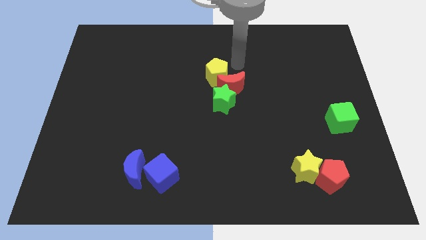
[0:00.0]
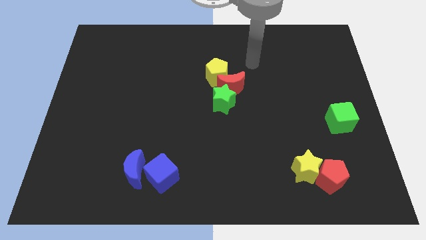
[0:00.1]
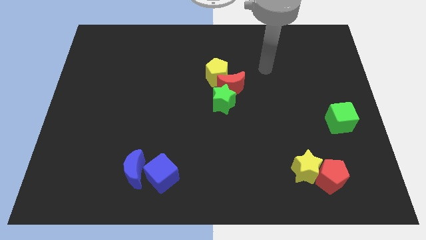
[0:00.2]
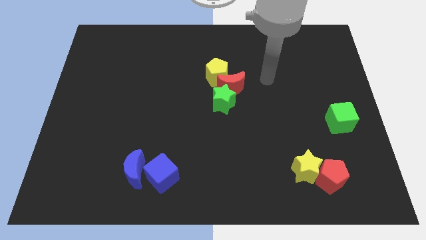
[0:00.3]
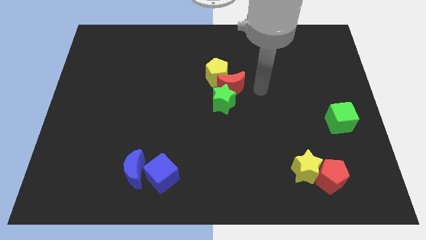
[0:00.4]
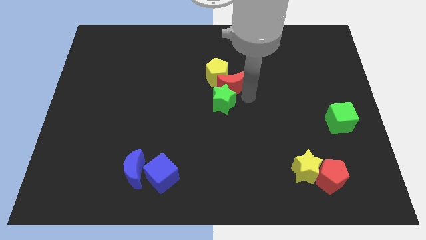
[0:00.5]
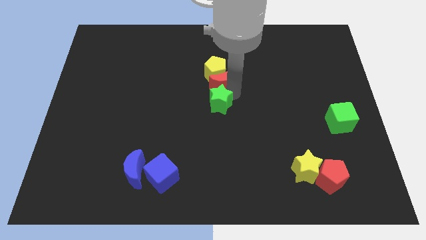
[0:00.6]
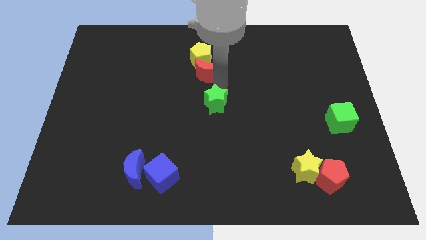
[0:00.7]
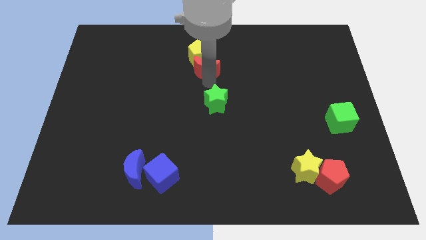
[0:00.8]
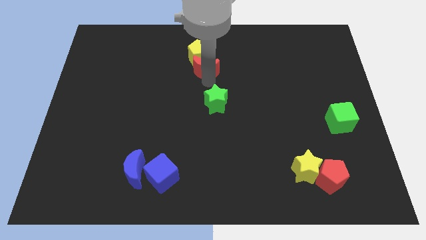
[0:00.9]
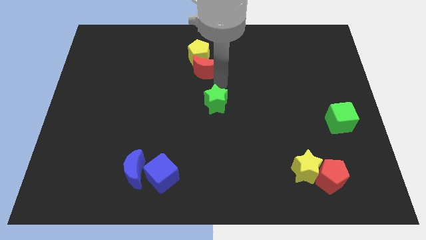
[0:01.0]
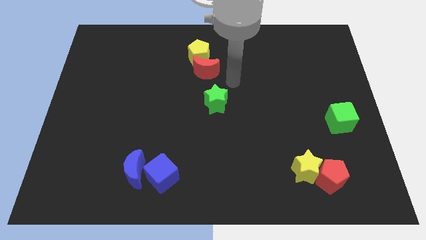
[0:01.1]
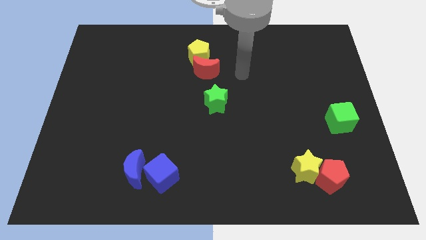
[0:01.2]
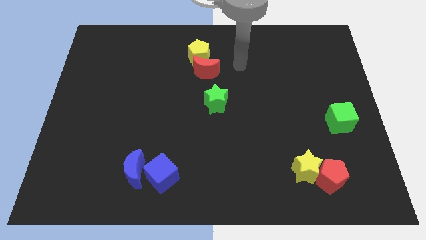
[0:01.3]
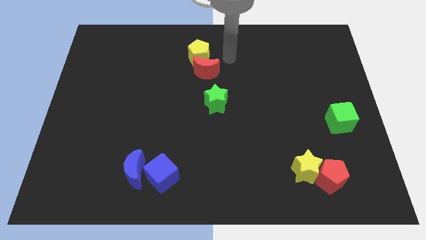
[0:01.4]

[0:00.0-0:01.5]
separate the red moon and green star

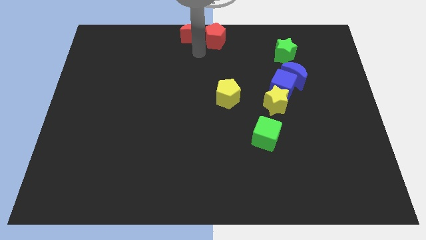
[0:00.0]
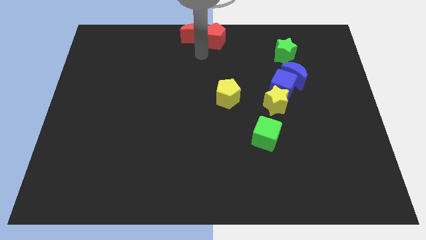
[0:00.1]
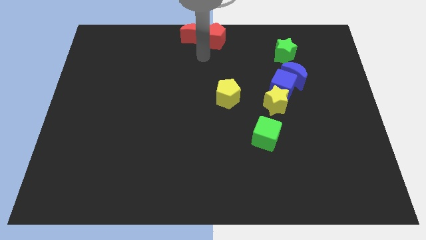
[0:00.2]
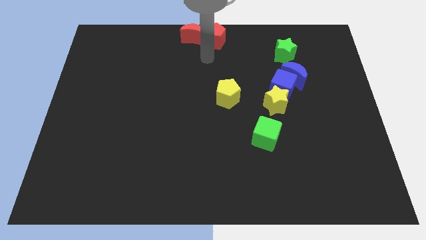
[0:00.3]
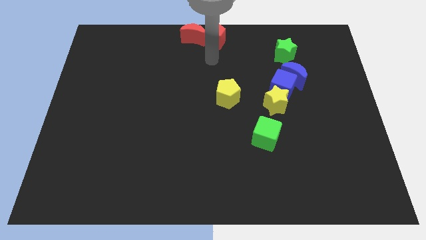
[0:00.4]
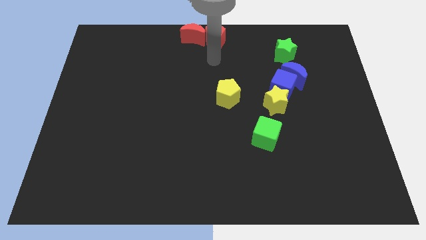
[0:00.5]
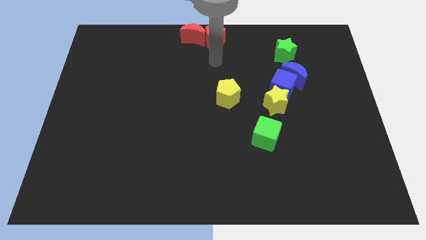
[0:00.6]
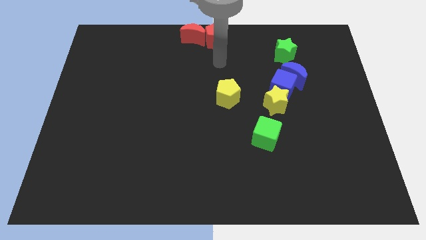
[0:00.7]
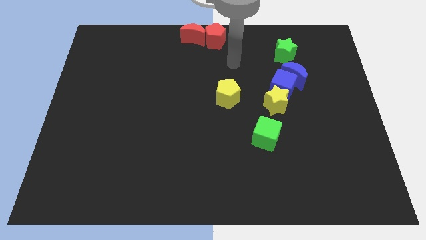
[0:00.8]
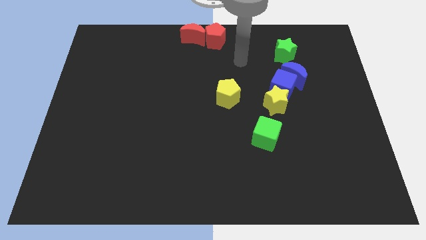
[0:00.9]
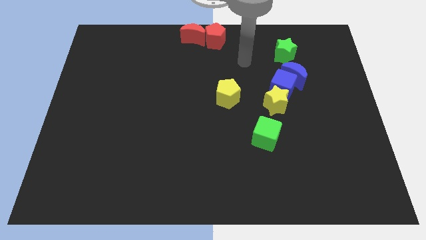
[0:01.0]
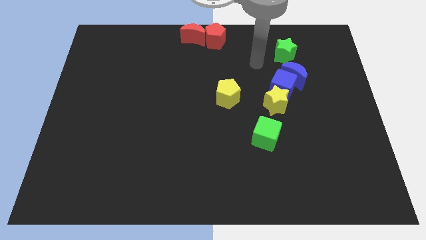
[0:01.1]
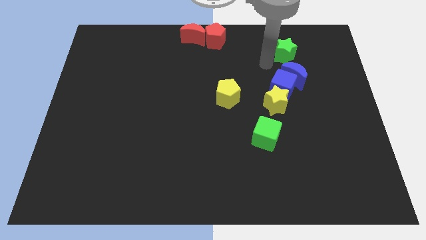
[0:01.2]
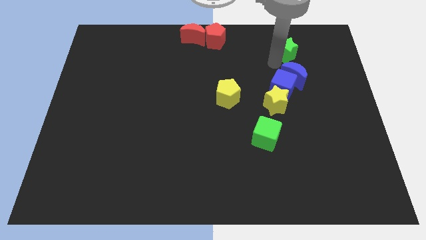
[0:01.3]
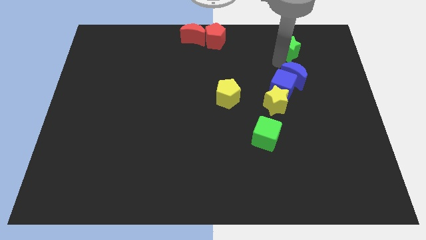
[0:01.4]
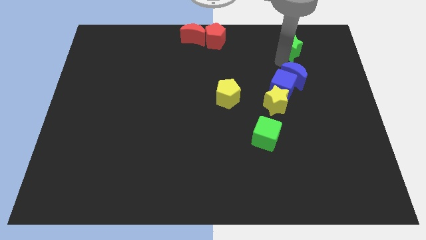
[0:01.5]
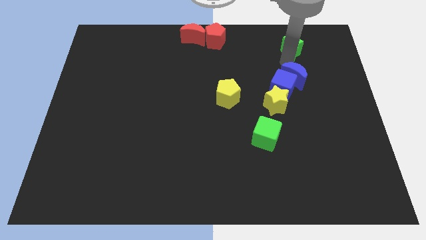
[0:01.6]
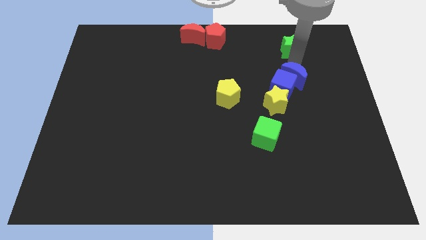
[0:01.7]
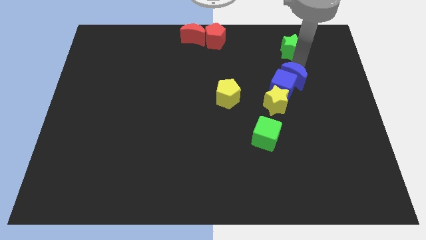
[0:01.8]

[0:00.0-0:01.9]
place your arm in between the green star and blue moon

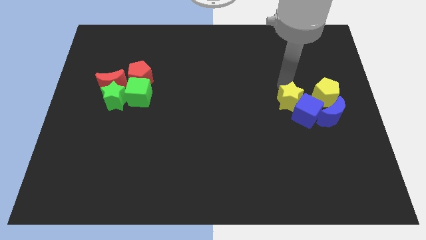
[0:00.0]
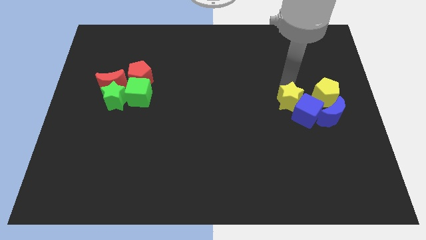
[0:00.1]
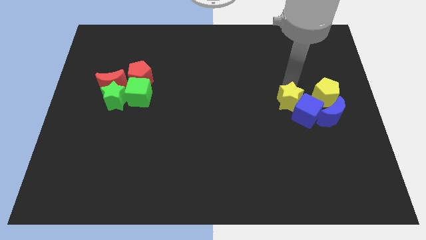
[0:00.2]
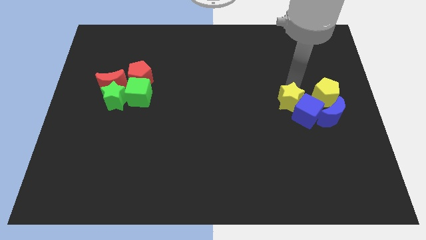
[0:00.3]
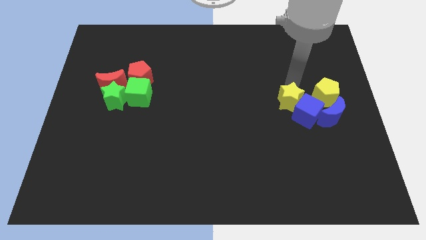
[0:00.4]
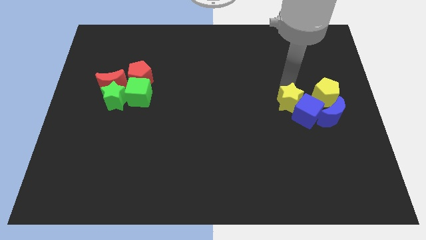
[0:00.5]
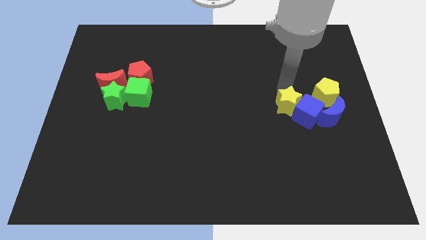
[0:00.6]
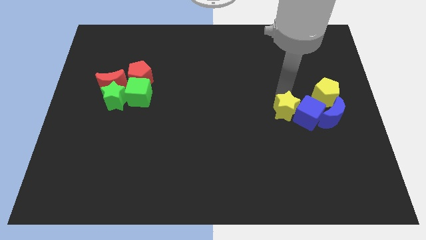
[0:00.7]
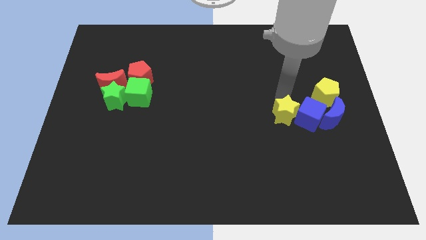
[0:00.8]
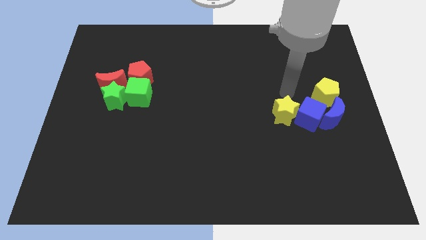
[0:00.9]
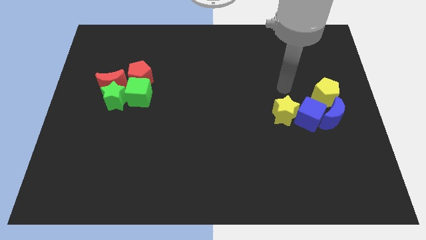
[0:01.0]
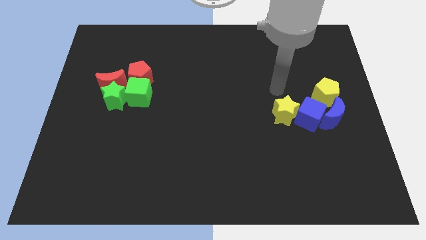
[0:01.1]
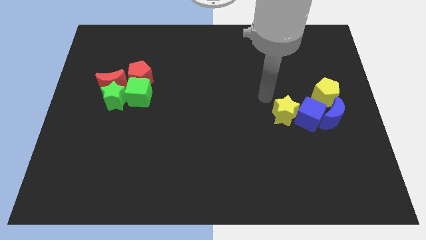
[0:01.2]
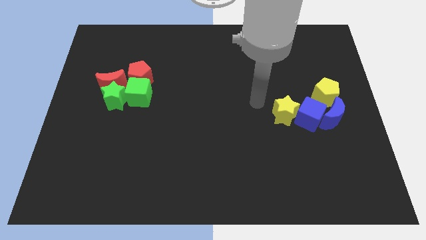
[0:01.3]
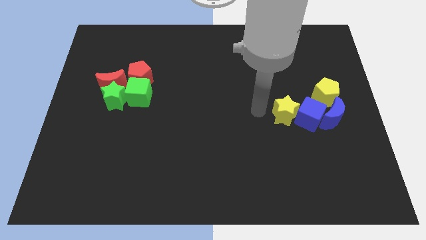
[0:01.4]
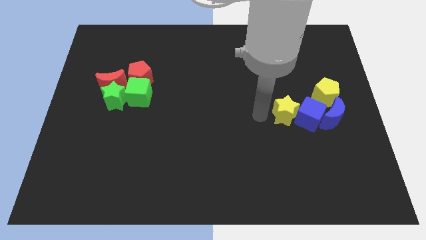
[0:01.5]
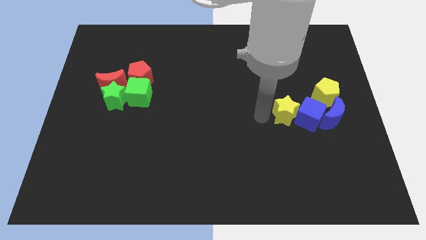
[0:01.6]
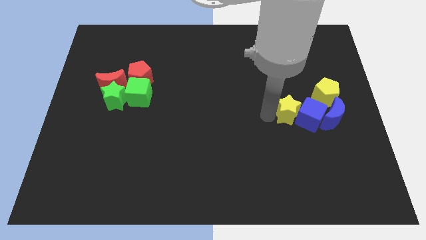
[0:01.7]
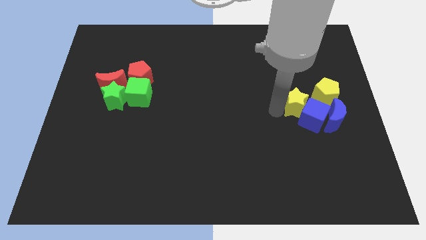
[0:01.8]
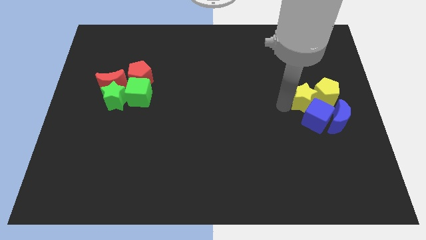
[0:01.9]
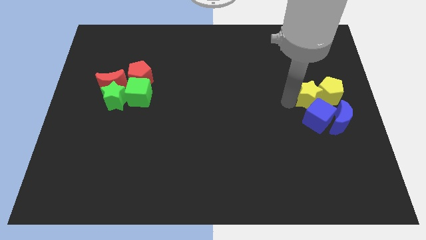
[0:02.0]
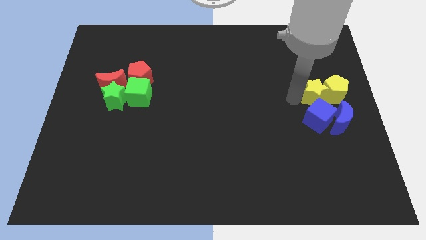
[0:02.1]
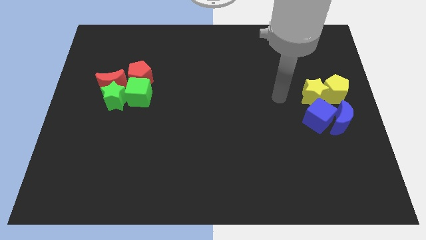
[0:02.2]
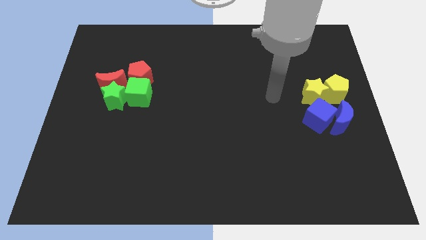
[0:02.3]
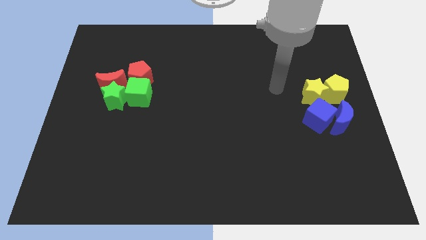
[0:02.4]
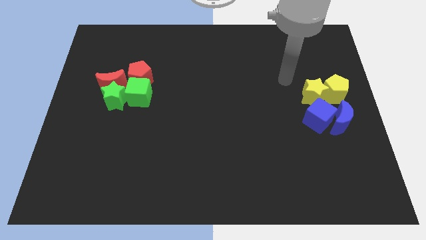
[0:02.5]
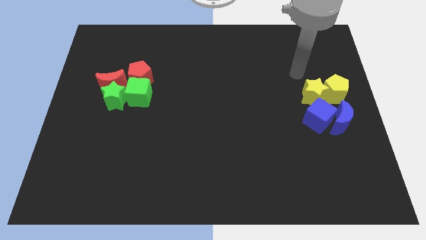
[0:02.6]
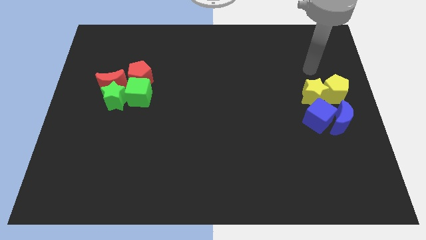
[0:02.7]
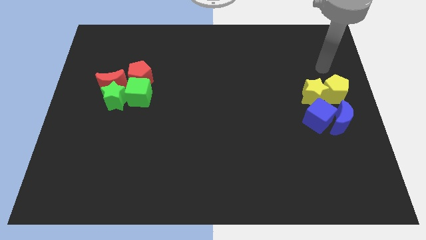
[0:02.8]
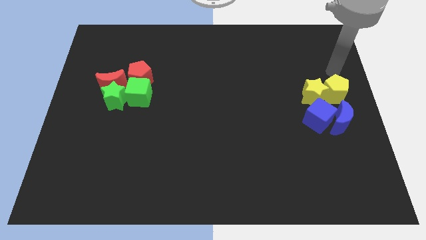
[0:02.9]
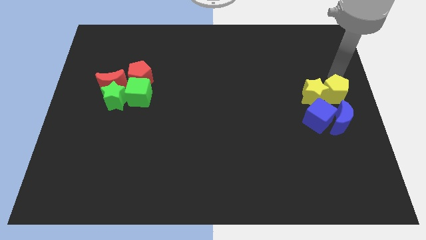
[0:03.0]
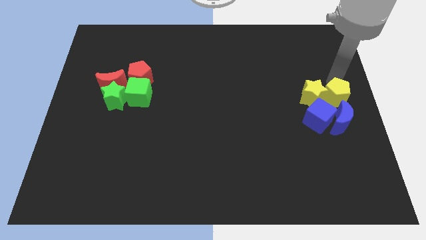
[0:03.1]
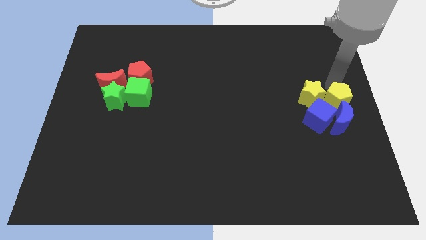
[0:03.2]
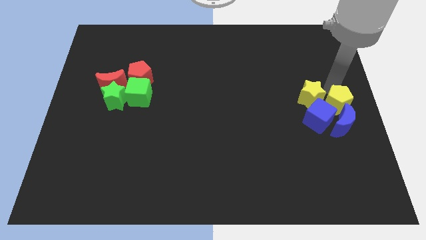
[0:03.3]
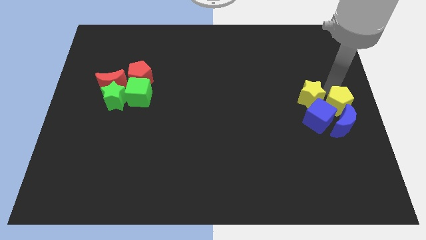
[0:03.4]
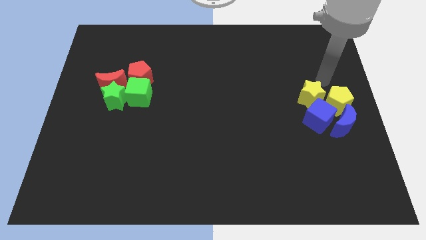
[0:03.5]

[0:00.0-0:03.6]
place your arm above the yellow blocks

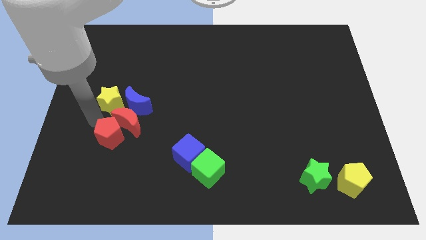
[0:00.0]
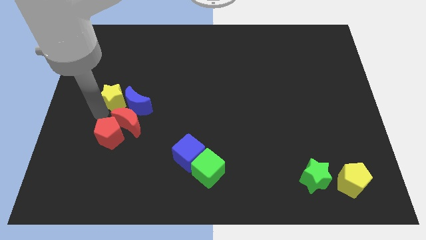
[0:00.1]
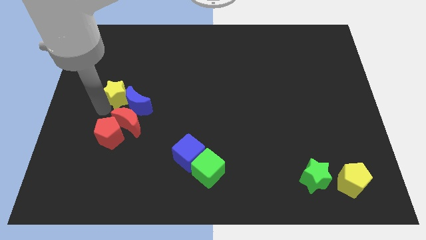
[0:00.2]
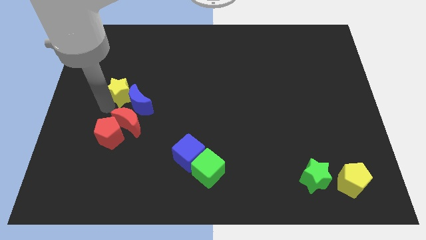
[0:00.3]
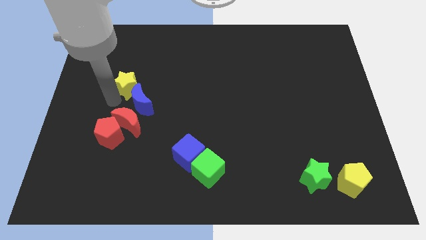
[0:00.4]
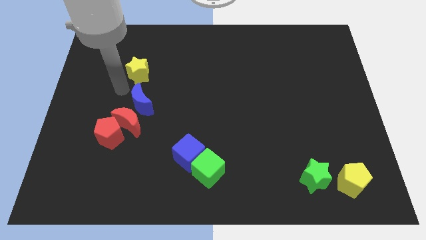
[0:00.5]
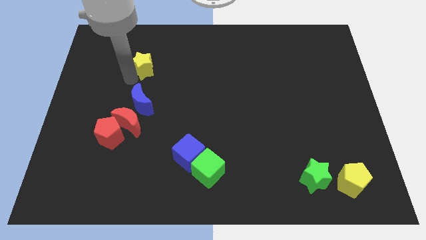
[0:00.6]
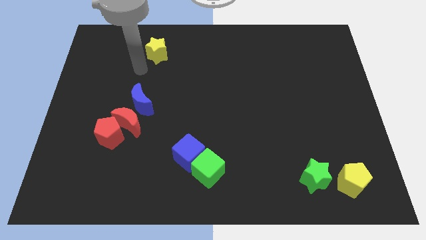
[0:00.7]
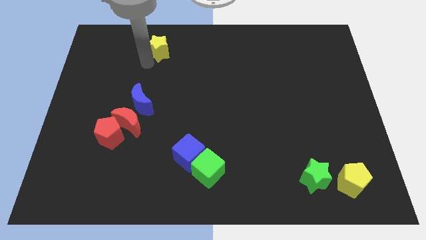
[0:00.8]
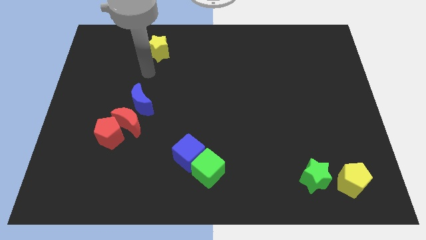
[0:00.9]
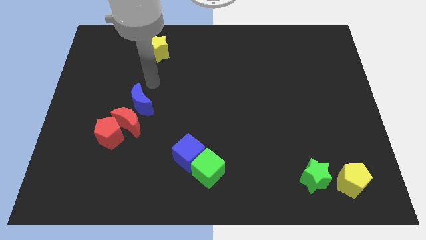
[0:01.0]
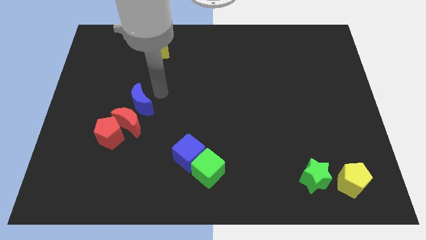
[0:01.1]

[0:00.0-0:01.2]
separate yellow star from red crescent

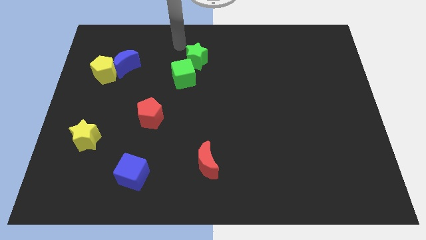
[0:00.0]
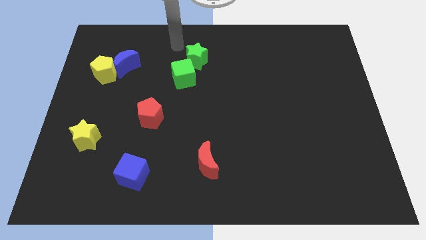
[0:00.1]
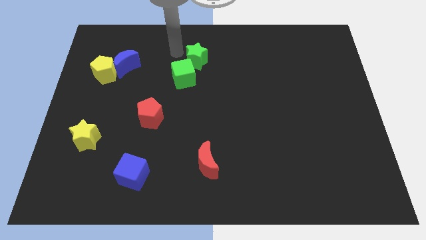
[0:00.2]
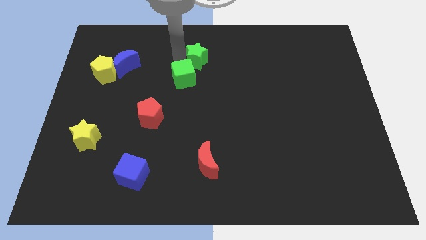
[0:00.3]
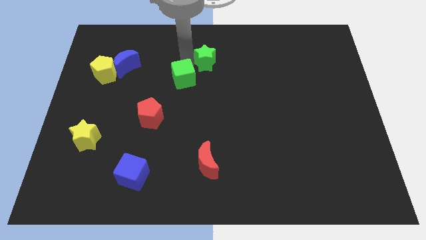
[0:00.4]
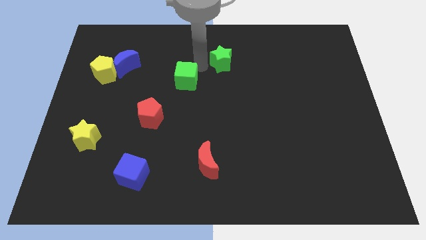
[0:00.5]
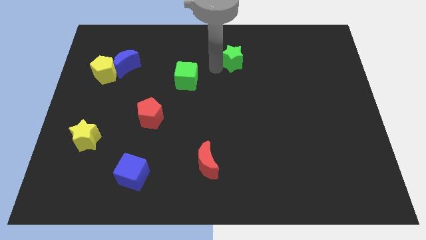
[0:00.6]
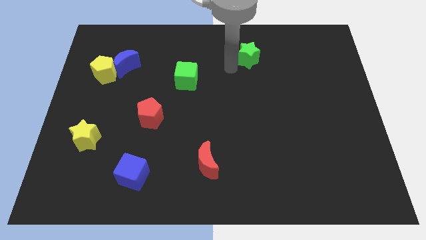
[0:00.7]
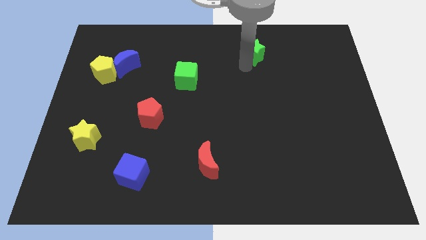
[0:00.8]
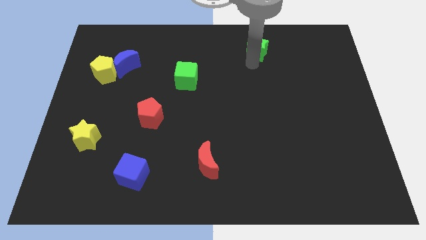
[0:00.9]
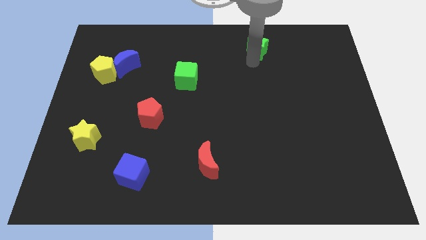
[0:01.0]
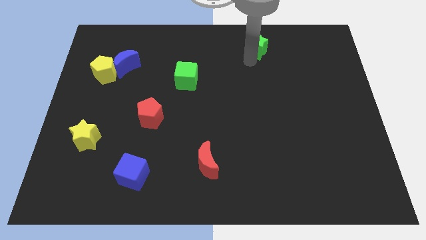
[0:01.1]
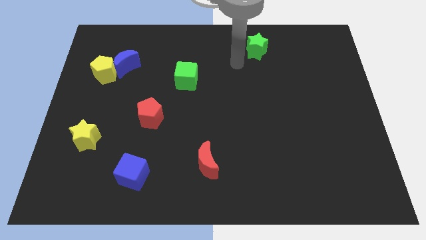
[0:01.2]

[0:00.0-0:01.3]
separate the green star from the green cube
